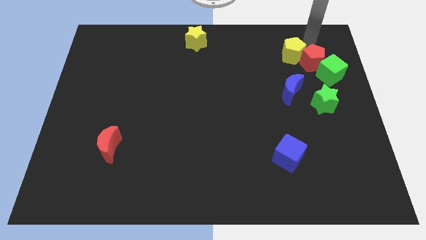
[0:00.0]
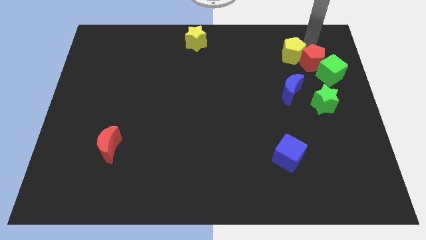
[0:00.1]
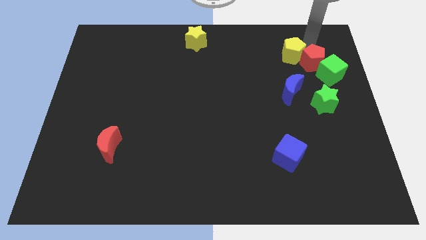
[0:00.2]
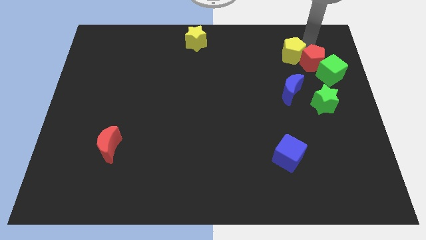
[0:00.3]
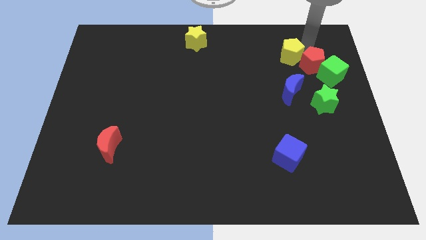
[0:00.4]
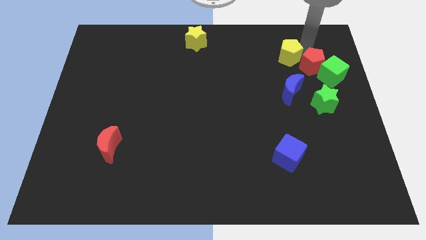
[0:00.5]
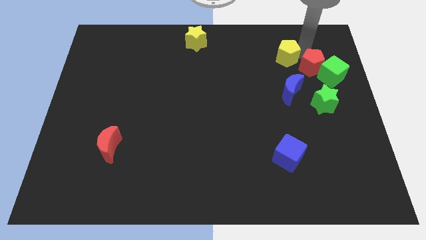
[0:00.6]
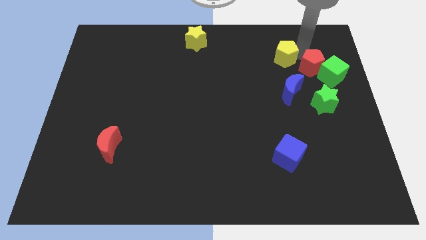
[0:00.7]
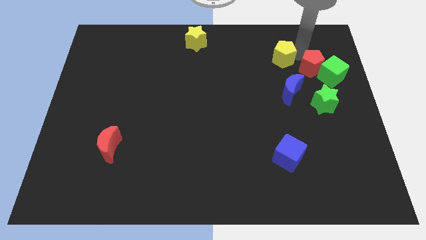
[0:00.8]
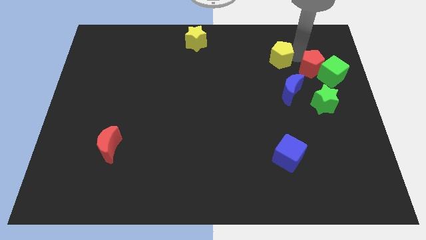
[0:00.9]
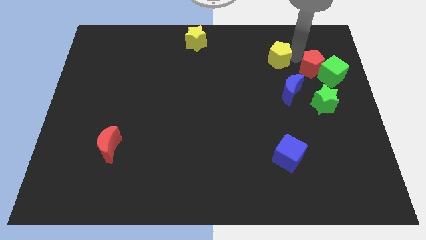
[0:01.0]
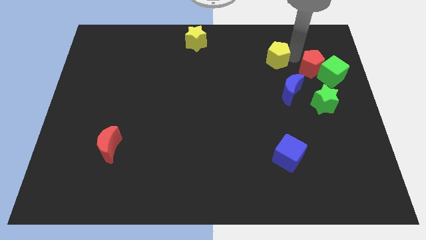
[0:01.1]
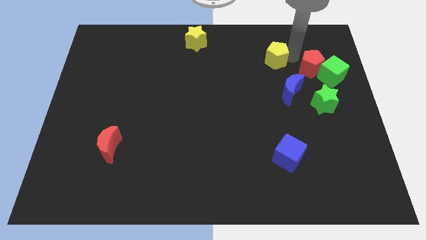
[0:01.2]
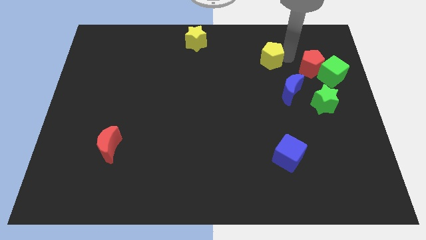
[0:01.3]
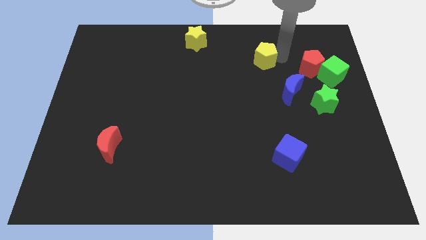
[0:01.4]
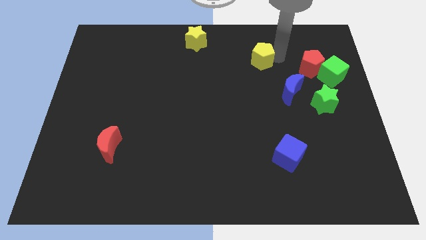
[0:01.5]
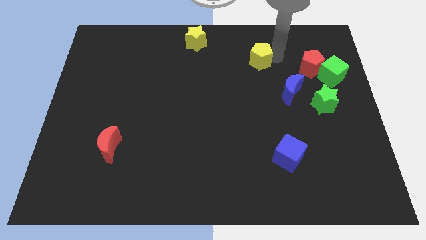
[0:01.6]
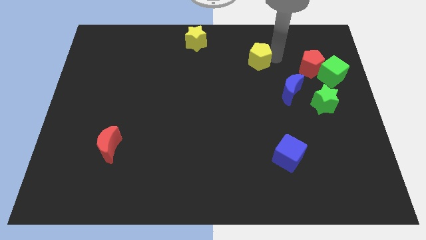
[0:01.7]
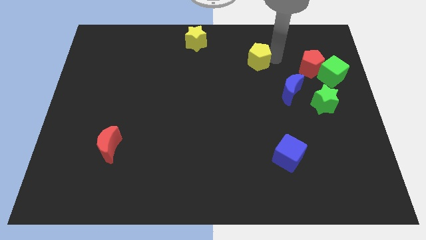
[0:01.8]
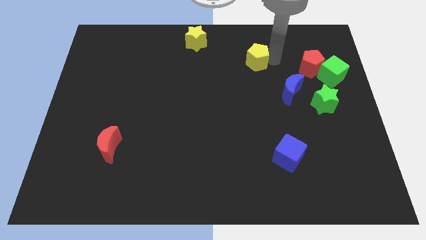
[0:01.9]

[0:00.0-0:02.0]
separate the yellow pentagon from the red pentagon

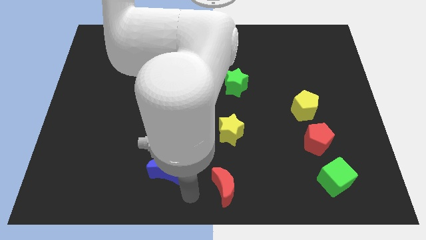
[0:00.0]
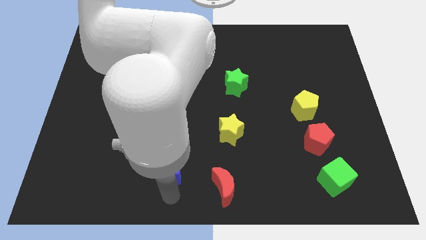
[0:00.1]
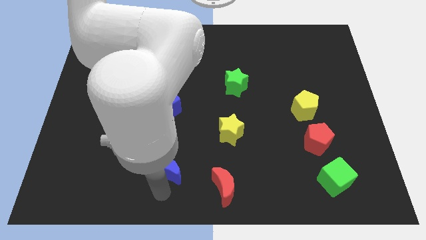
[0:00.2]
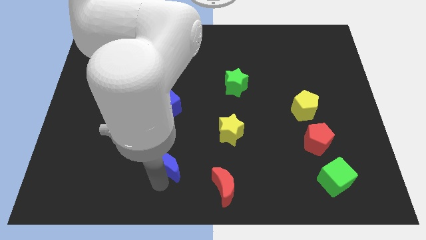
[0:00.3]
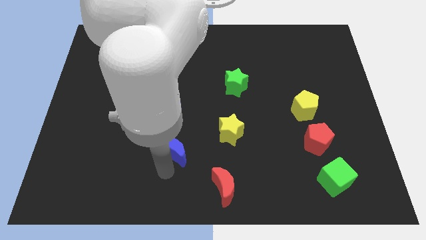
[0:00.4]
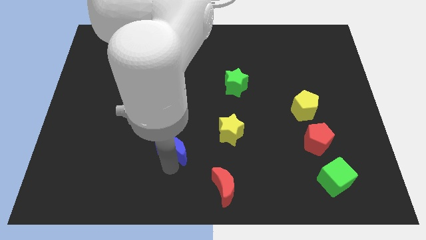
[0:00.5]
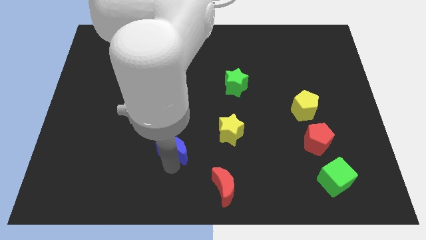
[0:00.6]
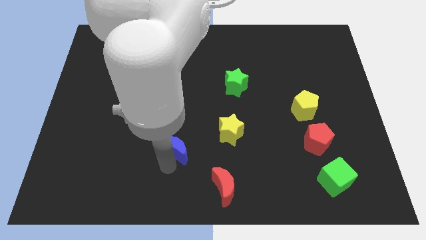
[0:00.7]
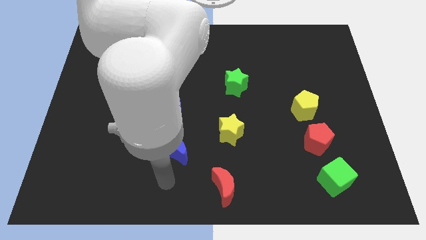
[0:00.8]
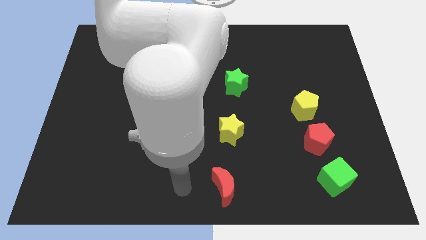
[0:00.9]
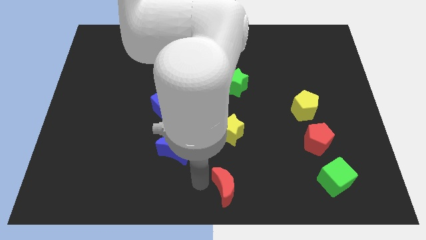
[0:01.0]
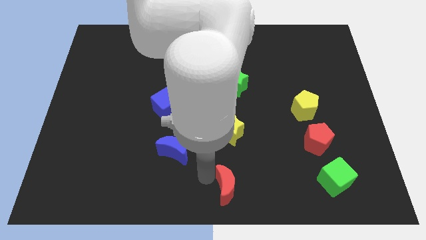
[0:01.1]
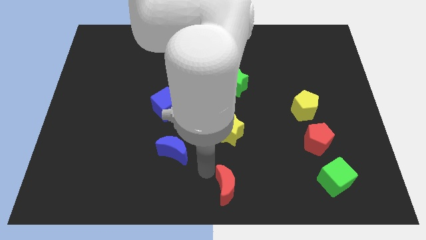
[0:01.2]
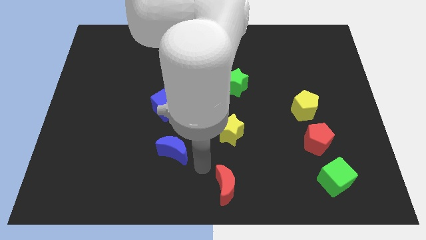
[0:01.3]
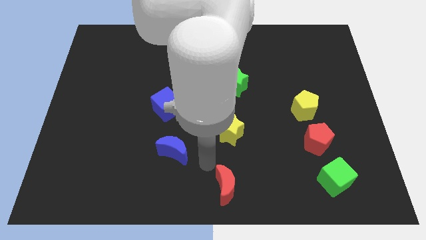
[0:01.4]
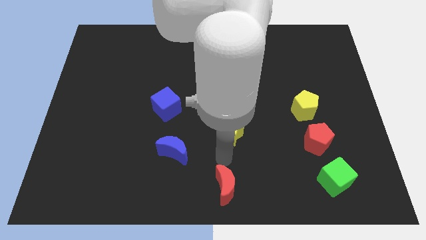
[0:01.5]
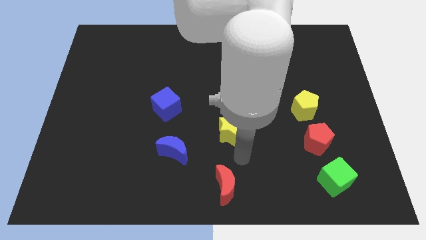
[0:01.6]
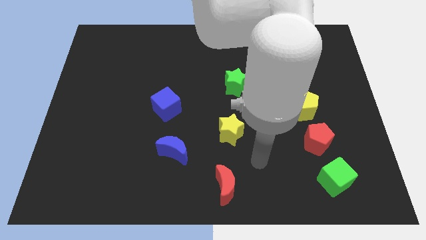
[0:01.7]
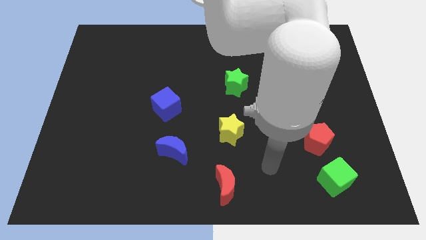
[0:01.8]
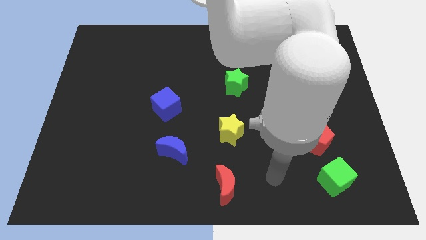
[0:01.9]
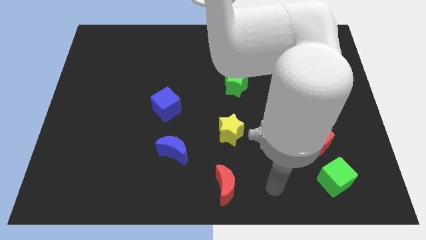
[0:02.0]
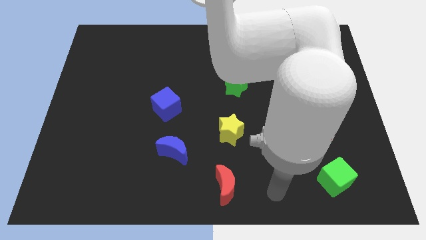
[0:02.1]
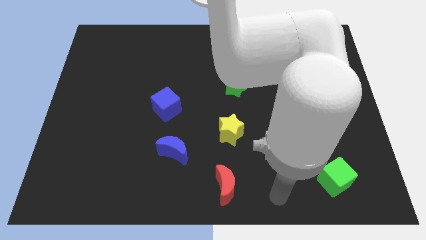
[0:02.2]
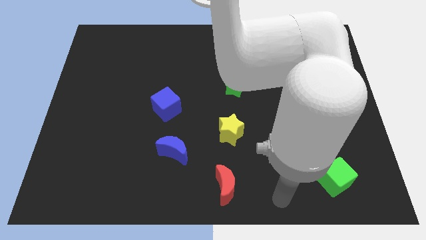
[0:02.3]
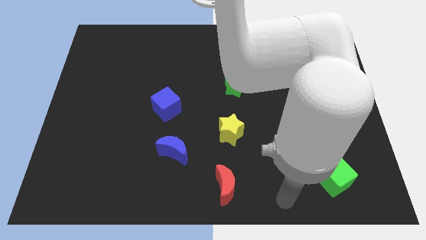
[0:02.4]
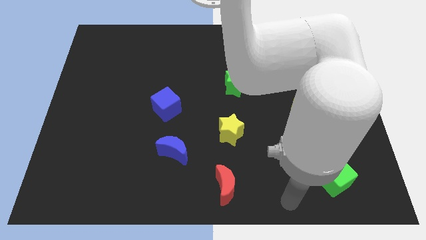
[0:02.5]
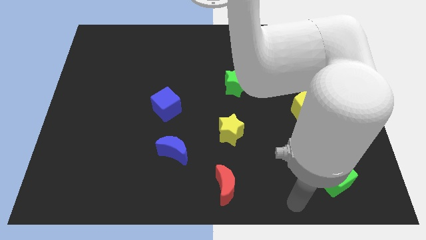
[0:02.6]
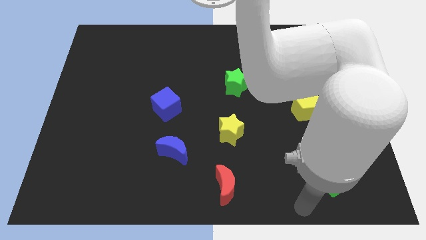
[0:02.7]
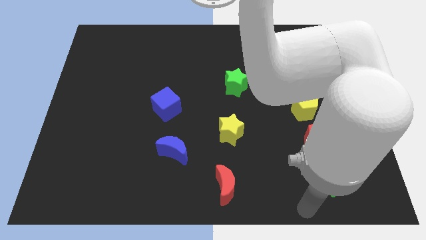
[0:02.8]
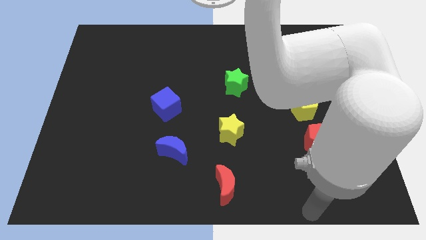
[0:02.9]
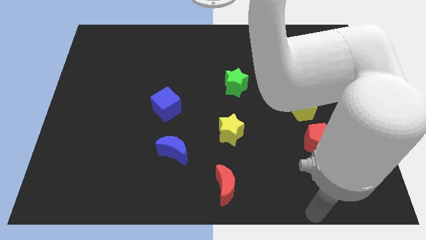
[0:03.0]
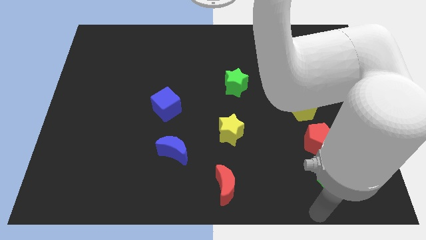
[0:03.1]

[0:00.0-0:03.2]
move the red moon to the center

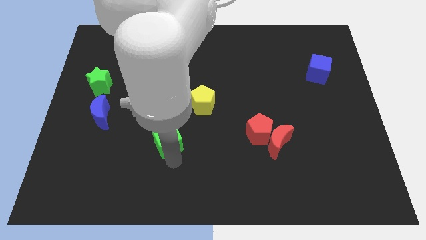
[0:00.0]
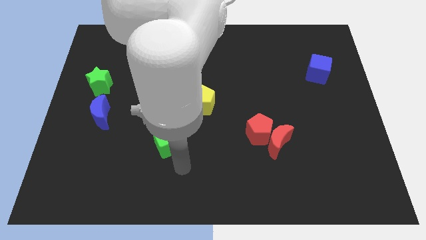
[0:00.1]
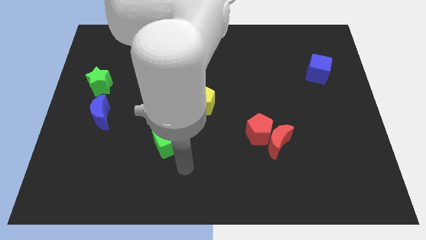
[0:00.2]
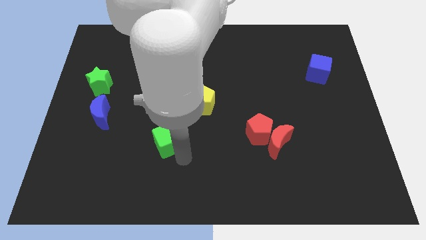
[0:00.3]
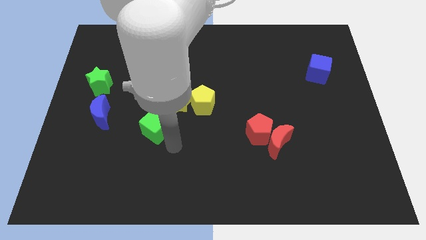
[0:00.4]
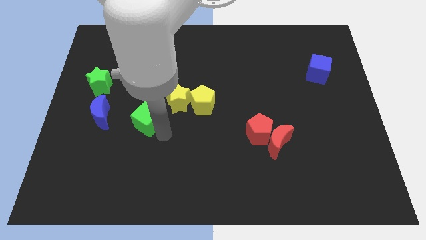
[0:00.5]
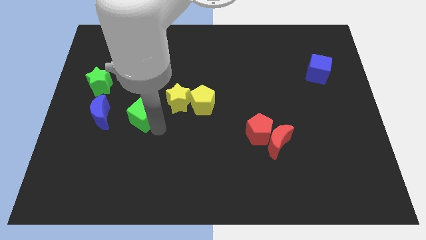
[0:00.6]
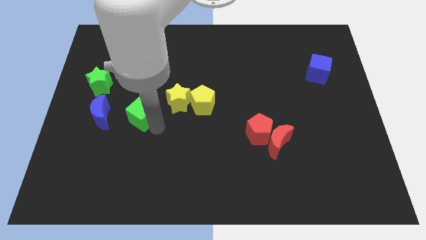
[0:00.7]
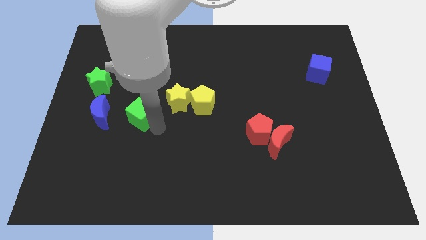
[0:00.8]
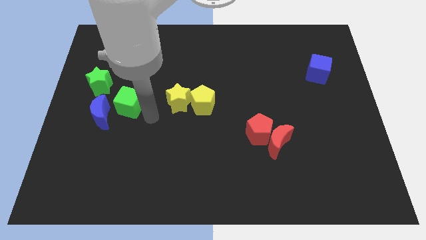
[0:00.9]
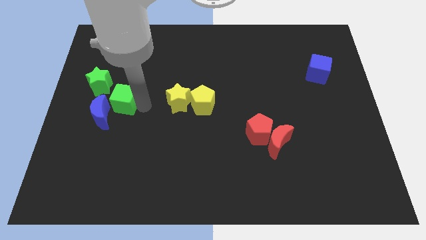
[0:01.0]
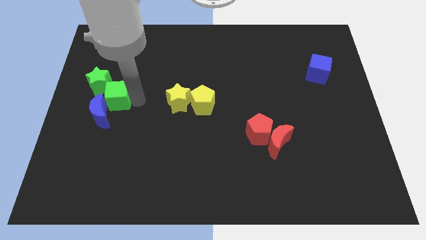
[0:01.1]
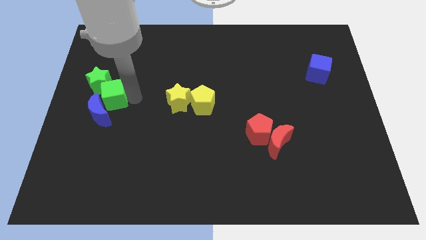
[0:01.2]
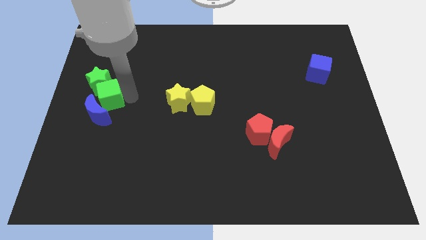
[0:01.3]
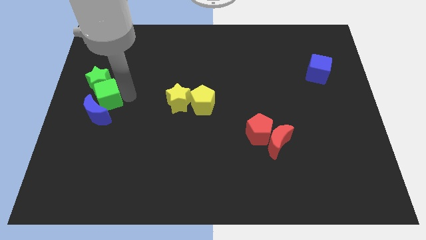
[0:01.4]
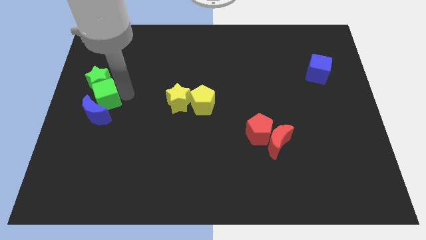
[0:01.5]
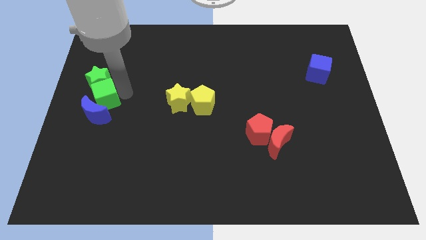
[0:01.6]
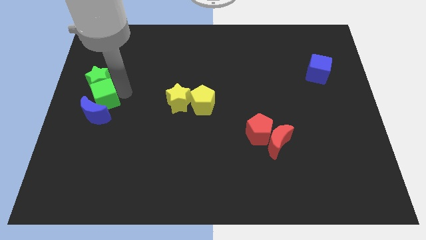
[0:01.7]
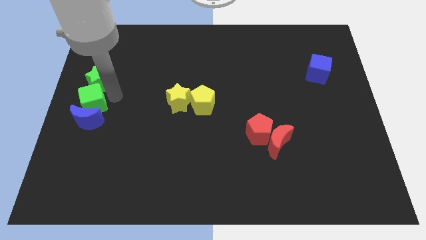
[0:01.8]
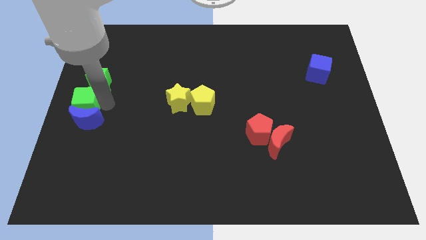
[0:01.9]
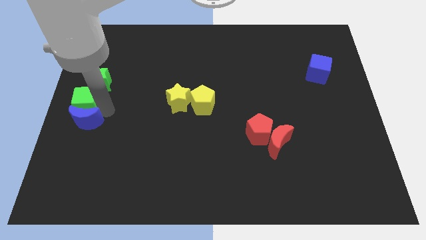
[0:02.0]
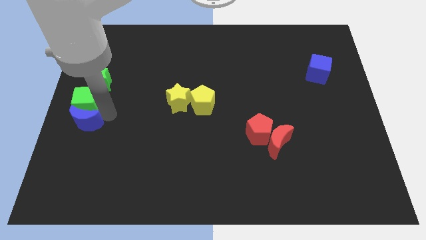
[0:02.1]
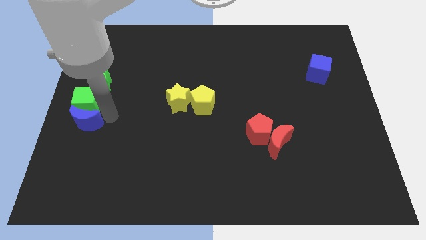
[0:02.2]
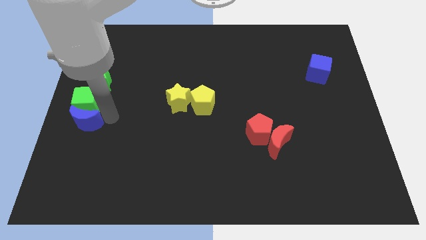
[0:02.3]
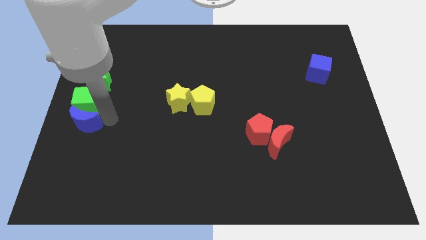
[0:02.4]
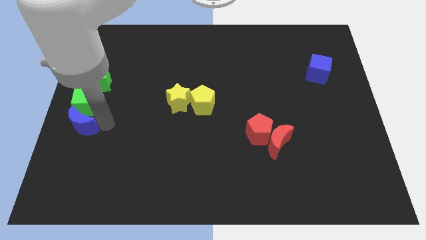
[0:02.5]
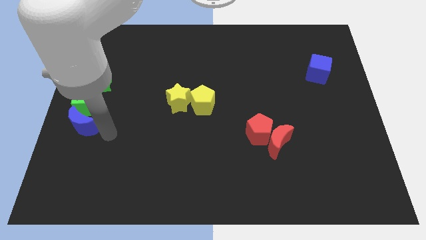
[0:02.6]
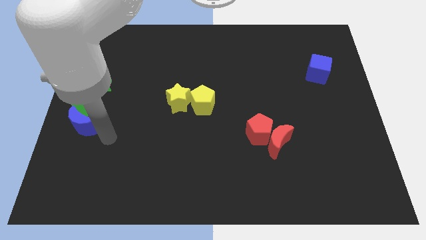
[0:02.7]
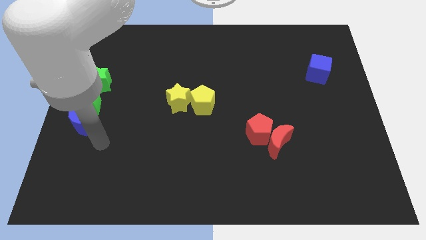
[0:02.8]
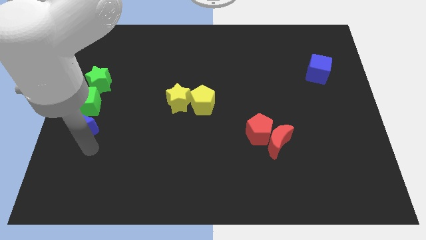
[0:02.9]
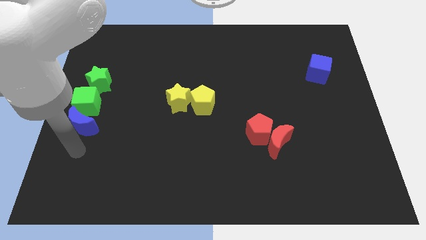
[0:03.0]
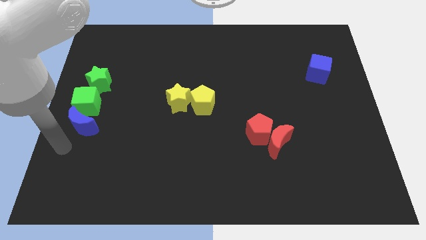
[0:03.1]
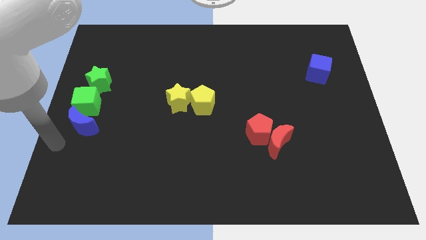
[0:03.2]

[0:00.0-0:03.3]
place the green cube to bottom of green star

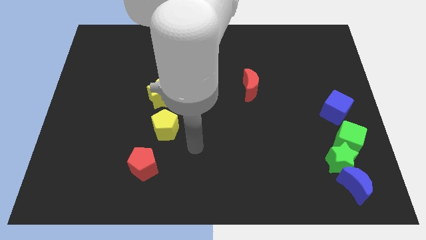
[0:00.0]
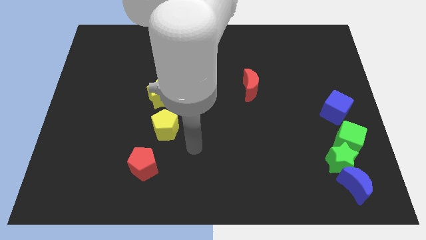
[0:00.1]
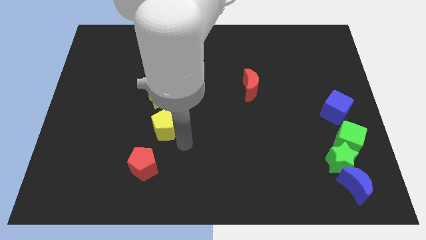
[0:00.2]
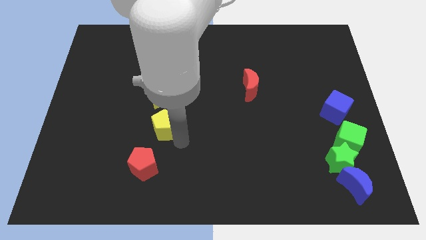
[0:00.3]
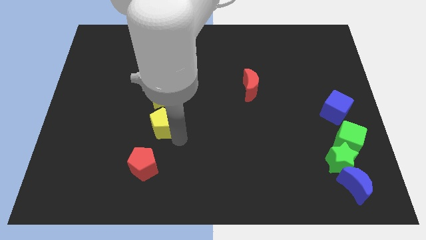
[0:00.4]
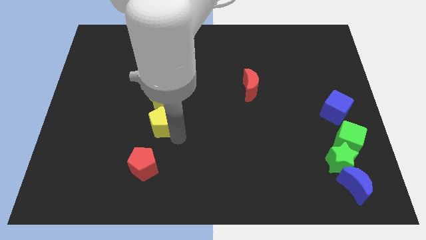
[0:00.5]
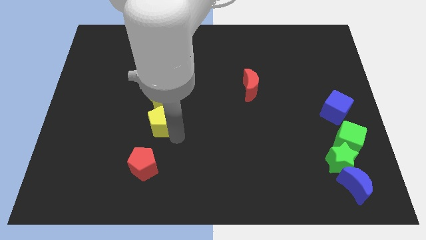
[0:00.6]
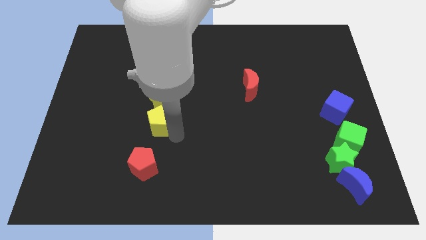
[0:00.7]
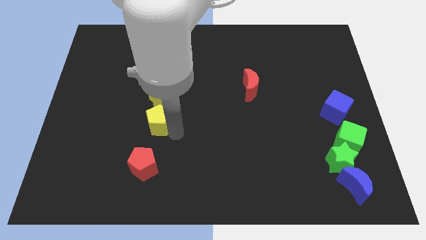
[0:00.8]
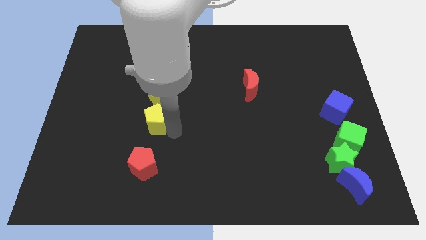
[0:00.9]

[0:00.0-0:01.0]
push the yellow pentagon close to the yellow star
